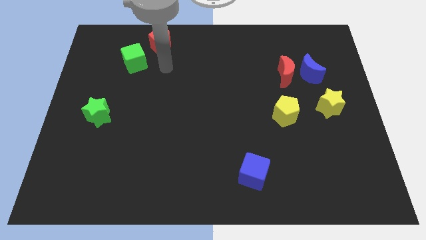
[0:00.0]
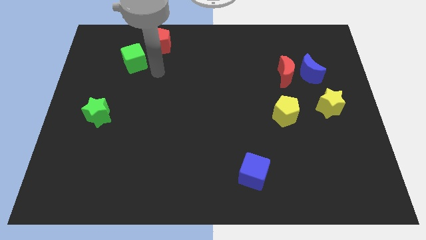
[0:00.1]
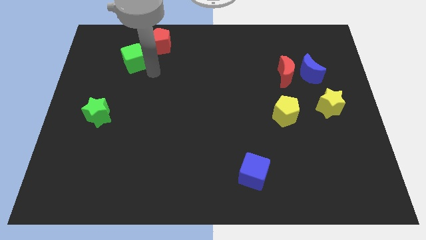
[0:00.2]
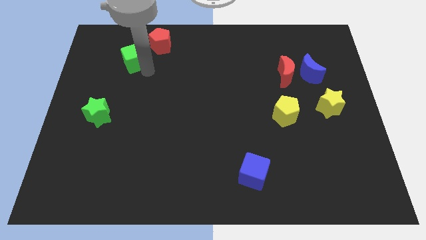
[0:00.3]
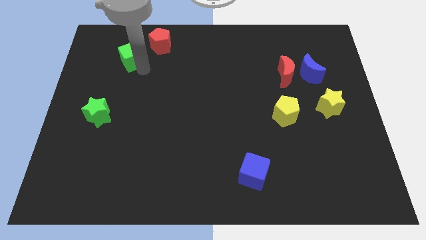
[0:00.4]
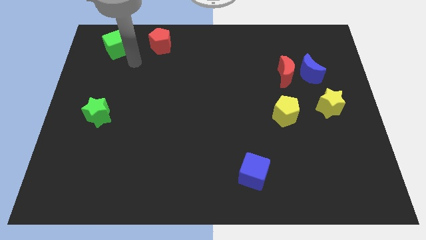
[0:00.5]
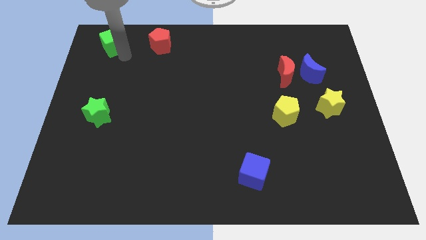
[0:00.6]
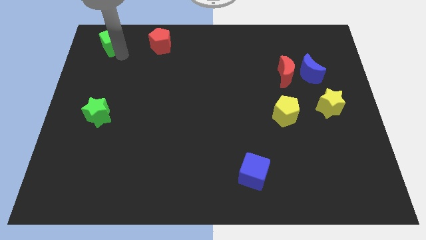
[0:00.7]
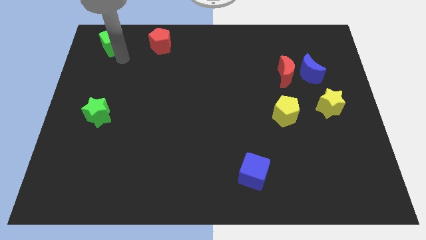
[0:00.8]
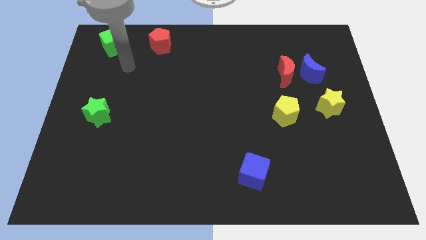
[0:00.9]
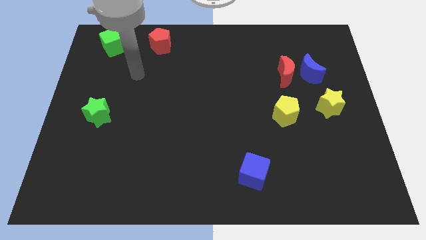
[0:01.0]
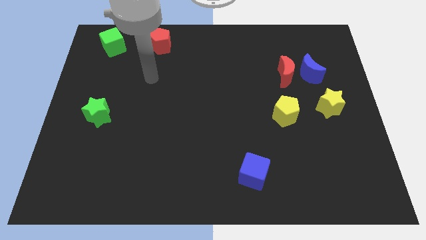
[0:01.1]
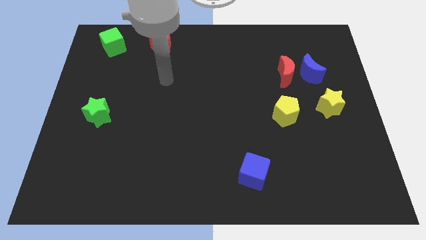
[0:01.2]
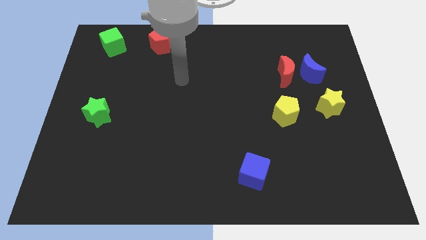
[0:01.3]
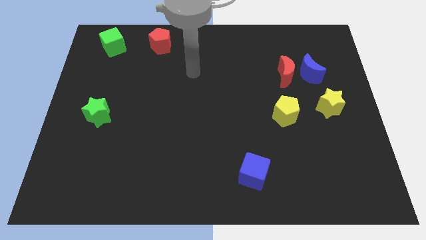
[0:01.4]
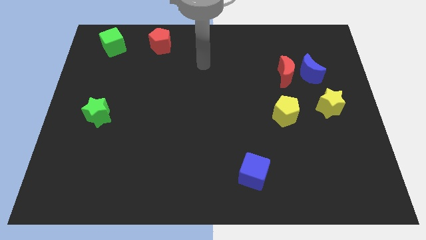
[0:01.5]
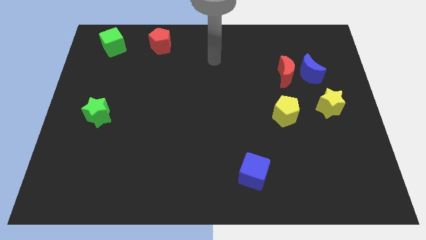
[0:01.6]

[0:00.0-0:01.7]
push green block to top left of the board

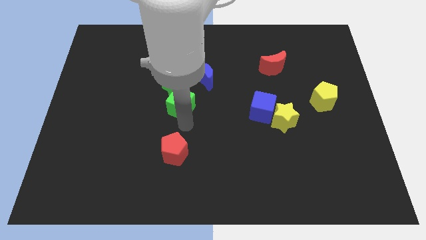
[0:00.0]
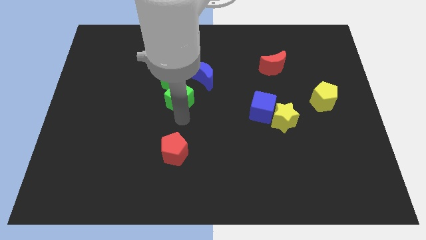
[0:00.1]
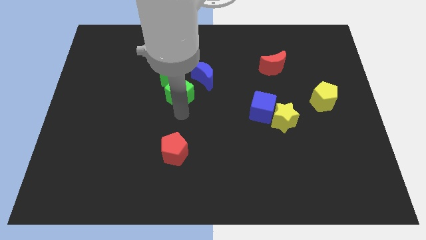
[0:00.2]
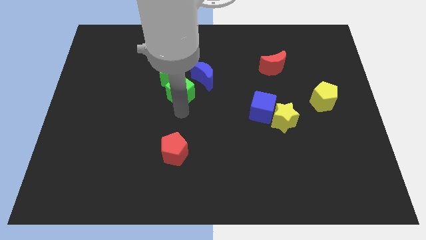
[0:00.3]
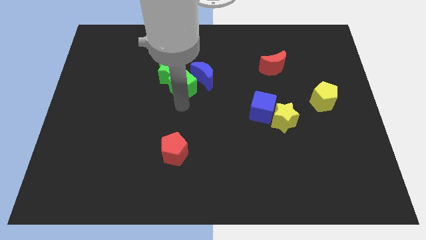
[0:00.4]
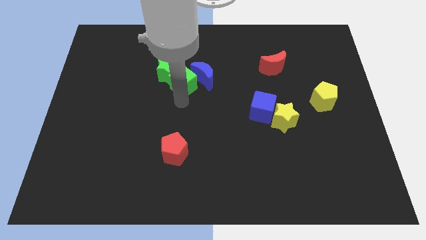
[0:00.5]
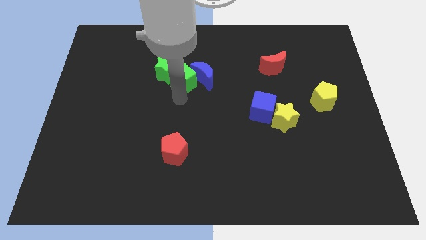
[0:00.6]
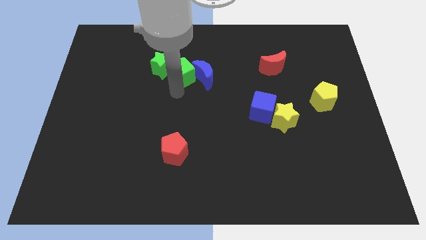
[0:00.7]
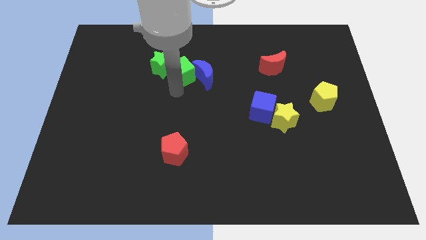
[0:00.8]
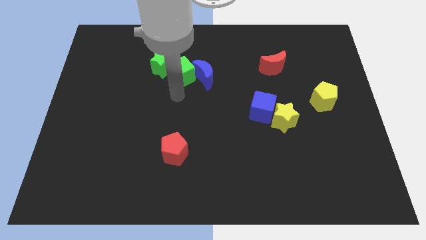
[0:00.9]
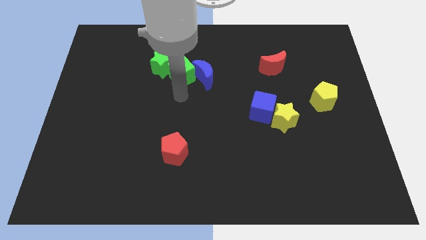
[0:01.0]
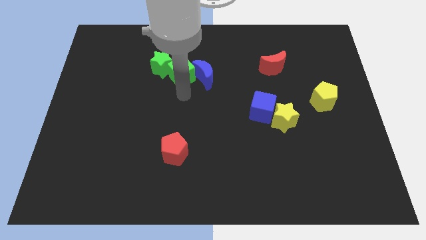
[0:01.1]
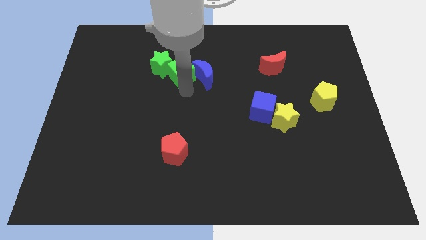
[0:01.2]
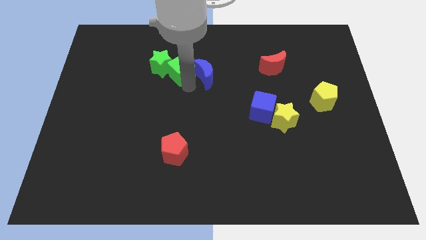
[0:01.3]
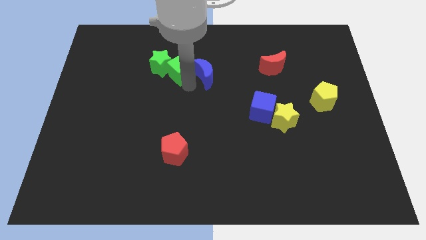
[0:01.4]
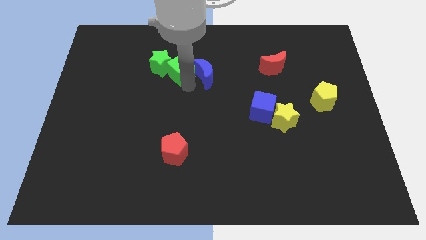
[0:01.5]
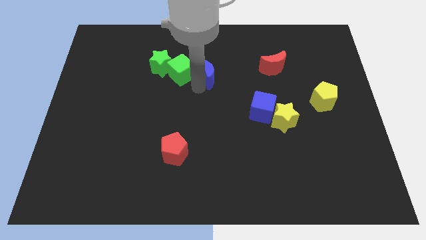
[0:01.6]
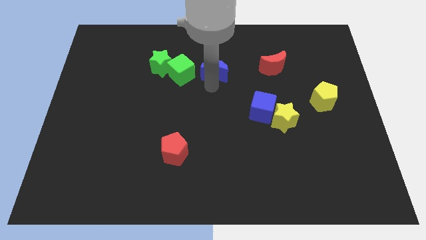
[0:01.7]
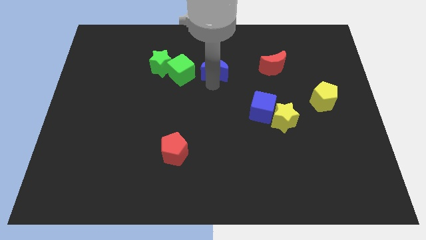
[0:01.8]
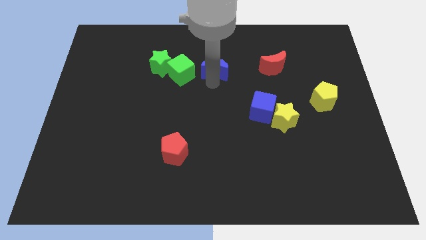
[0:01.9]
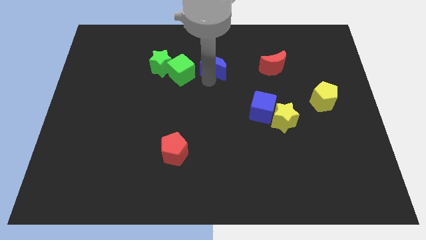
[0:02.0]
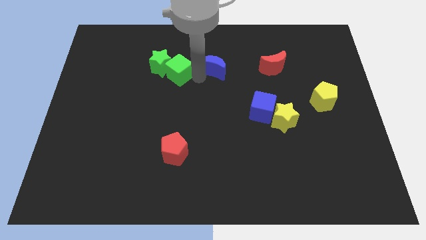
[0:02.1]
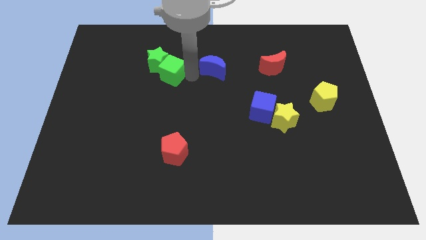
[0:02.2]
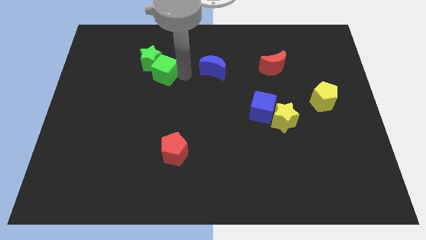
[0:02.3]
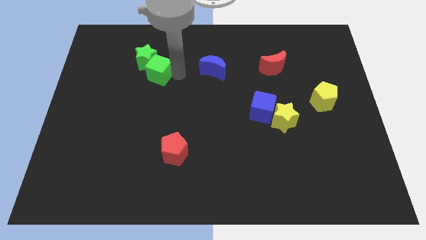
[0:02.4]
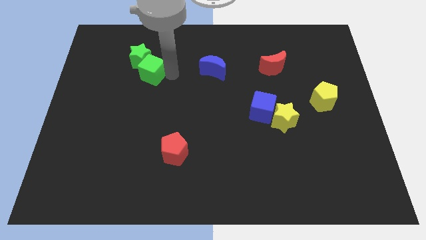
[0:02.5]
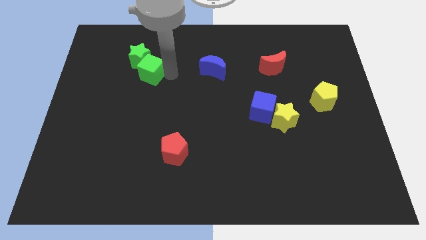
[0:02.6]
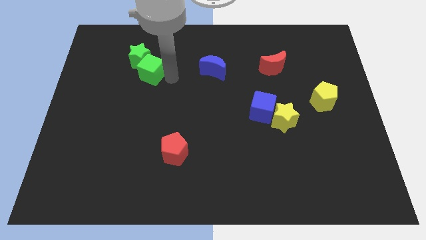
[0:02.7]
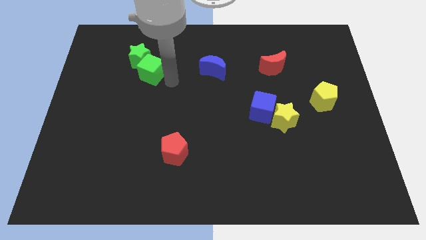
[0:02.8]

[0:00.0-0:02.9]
push green blocks slightly towards top left

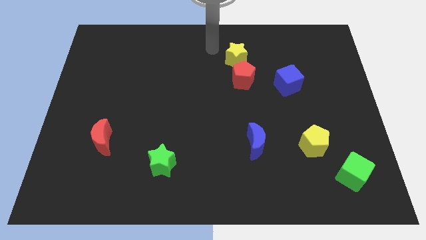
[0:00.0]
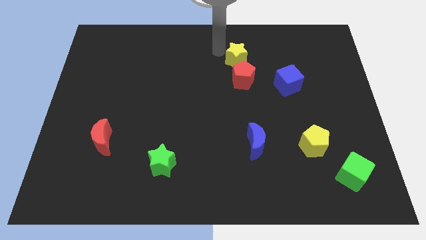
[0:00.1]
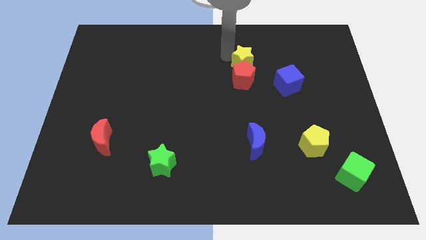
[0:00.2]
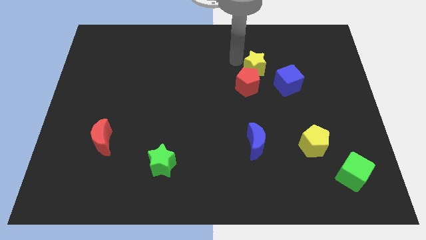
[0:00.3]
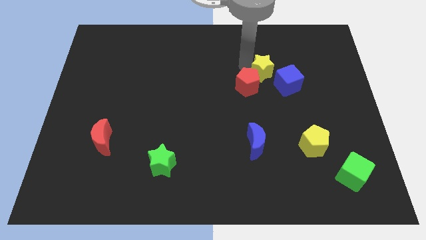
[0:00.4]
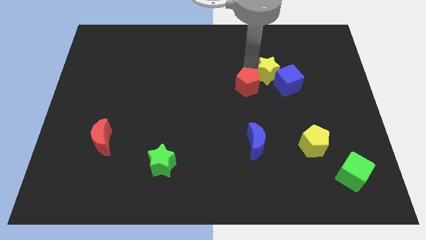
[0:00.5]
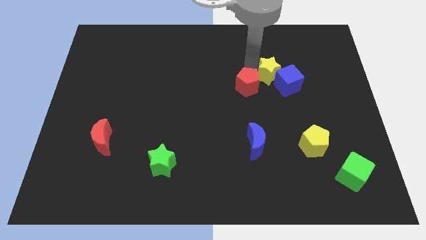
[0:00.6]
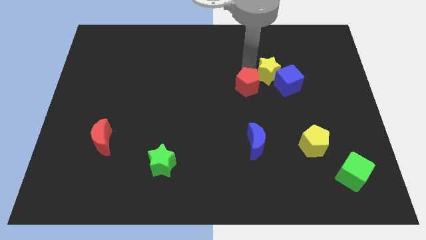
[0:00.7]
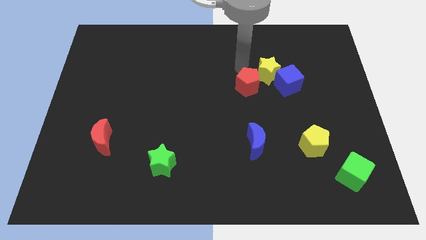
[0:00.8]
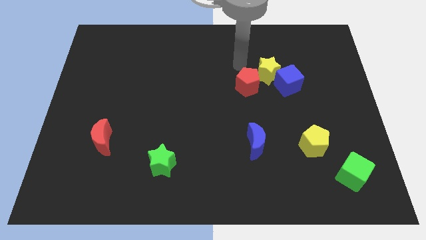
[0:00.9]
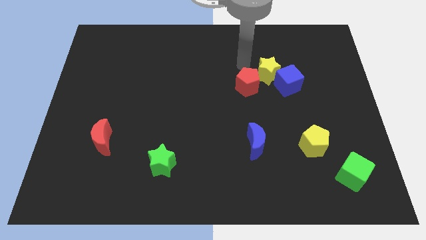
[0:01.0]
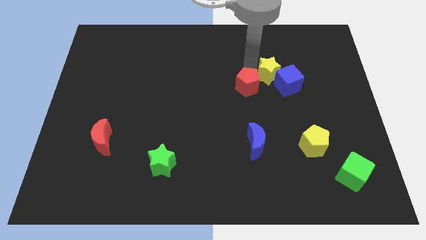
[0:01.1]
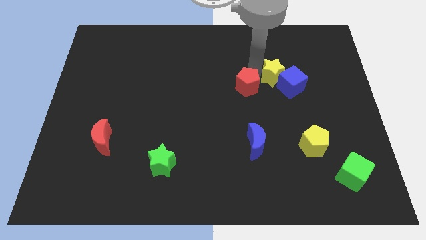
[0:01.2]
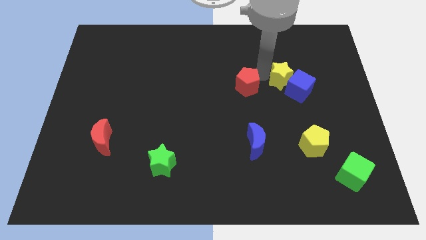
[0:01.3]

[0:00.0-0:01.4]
move the yellow star slightly in to blue cube

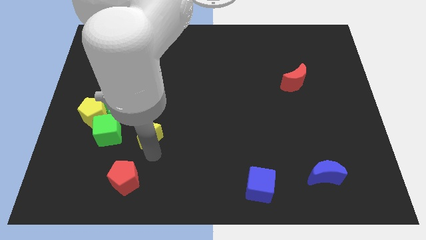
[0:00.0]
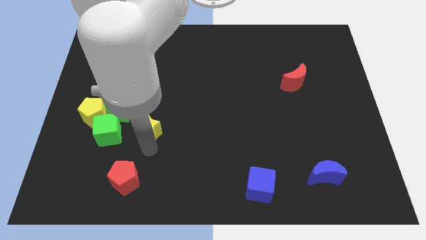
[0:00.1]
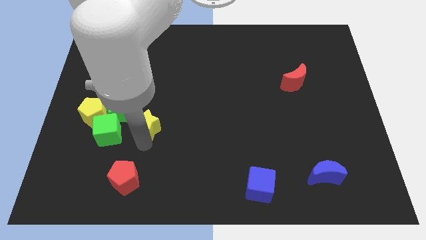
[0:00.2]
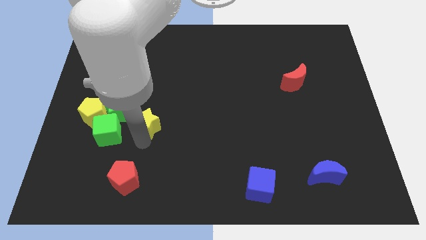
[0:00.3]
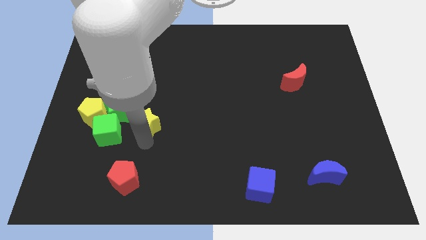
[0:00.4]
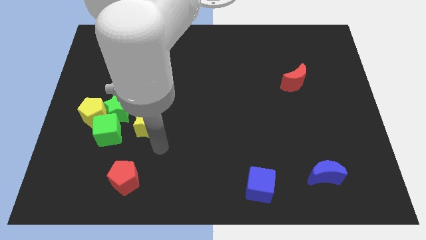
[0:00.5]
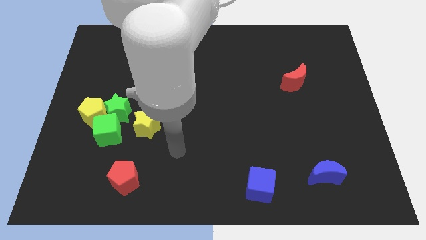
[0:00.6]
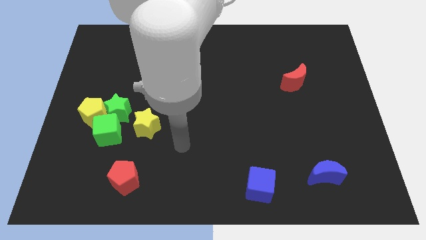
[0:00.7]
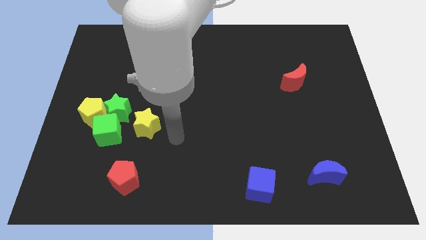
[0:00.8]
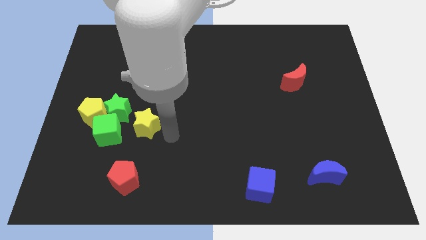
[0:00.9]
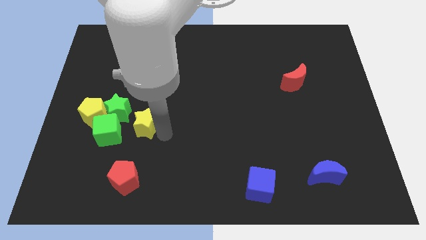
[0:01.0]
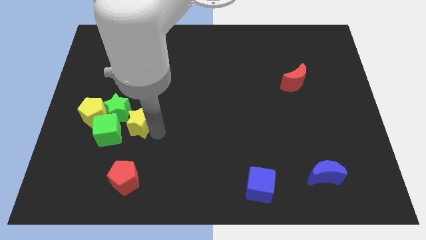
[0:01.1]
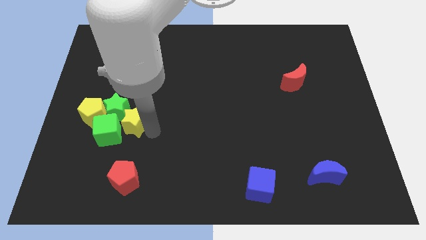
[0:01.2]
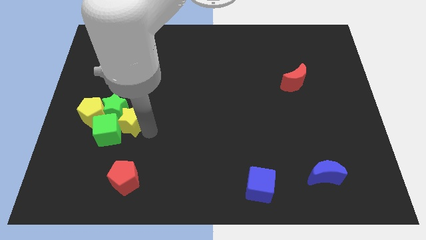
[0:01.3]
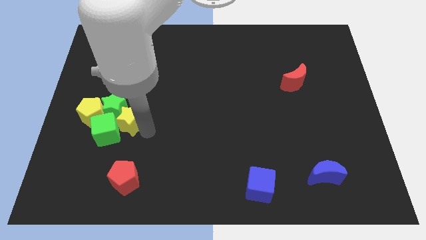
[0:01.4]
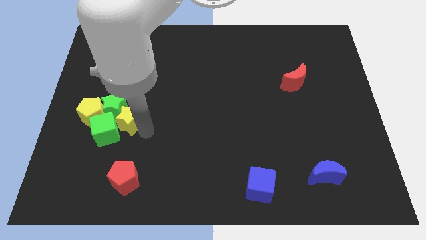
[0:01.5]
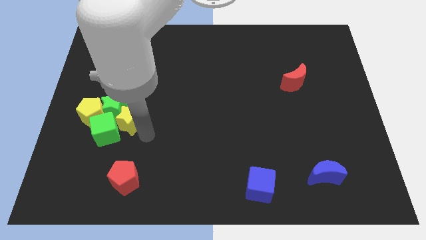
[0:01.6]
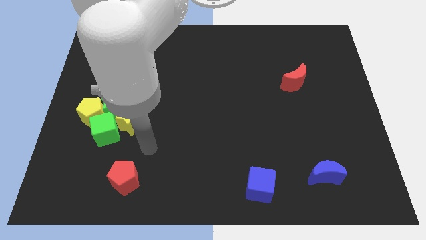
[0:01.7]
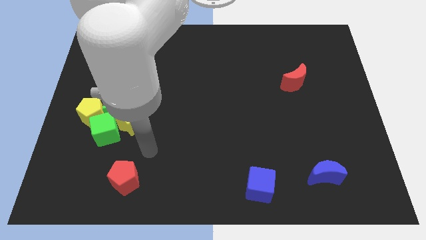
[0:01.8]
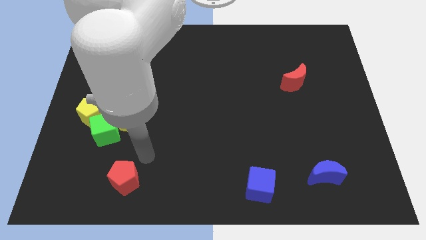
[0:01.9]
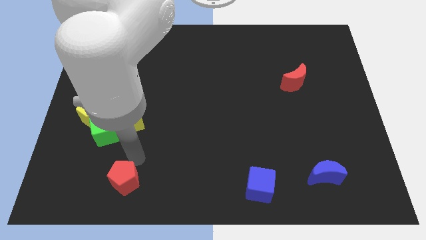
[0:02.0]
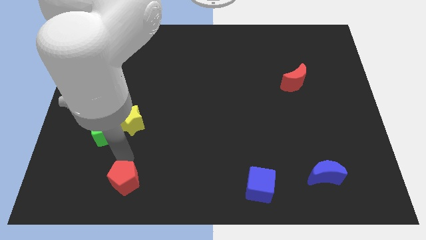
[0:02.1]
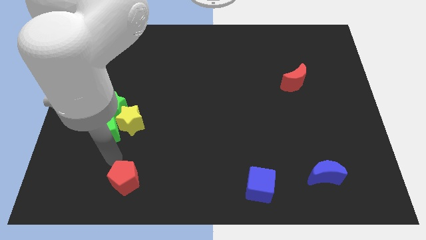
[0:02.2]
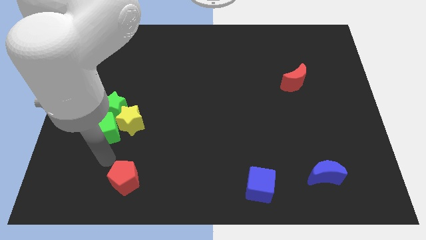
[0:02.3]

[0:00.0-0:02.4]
push the yellow star into the group of the blocks

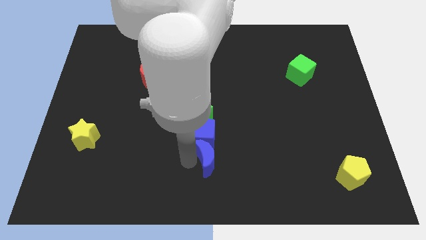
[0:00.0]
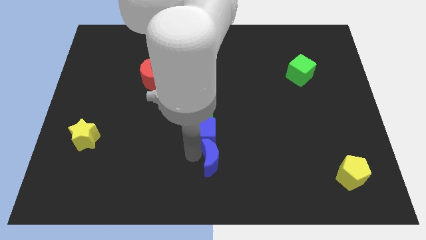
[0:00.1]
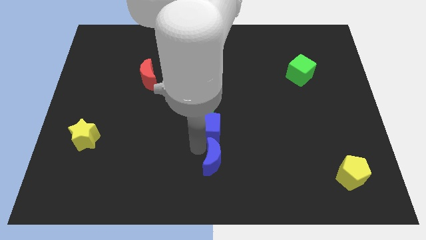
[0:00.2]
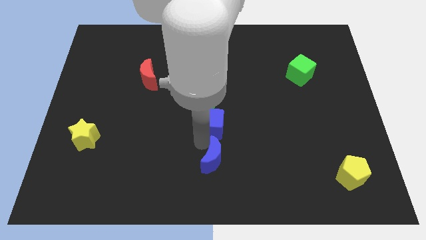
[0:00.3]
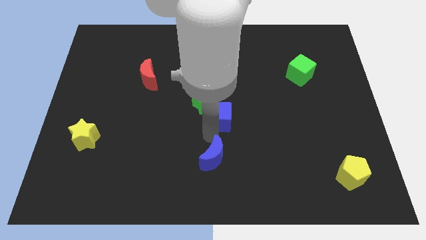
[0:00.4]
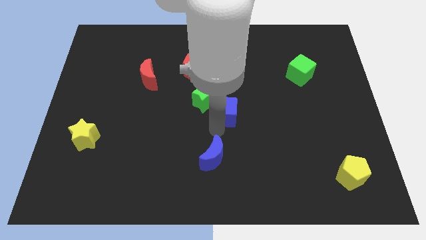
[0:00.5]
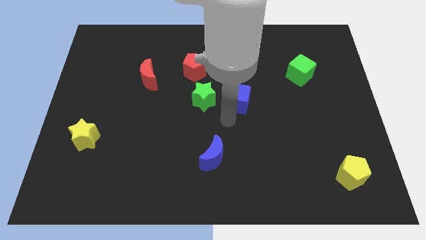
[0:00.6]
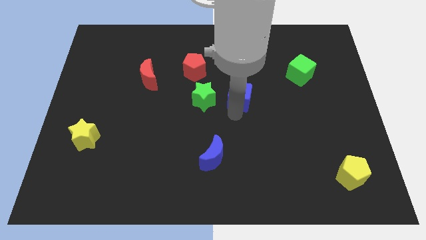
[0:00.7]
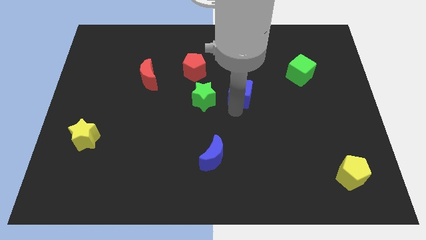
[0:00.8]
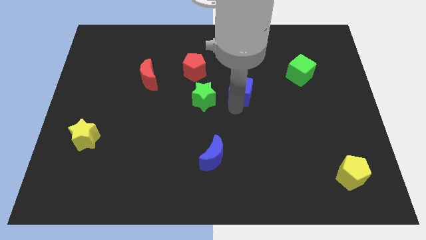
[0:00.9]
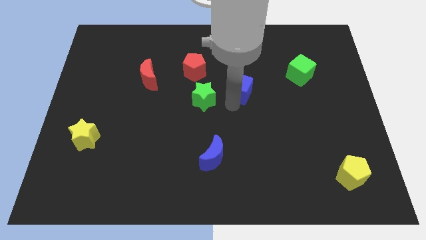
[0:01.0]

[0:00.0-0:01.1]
separate blue moon and blue cube
